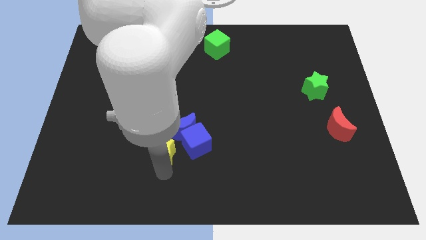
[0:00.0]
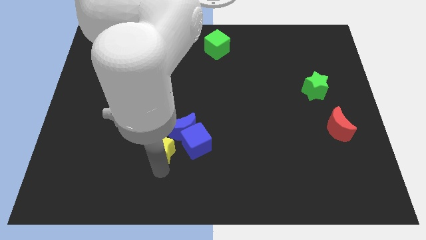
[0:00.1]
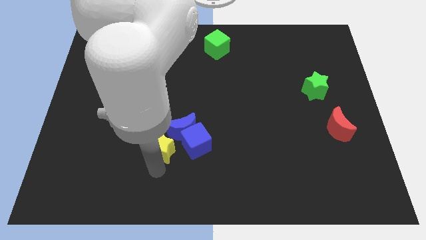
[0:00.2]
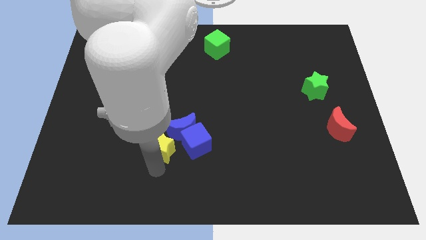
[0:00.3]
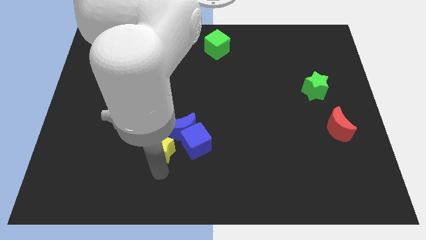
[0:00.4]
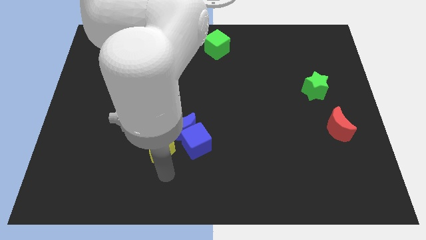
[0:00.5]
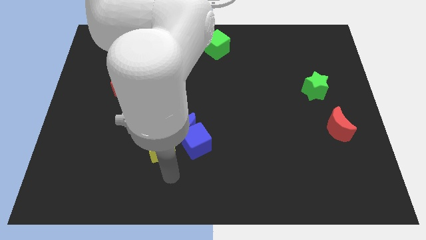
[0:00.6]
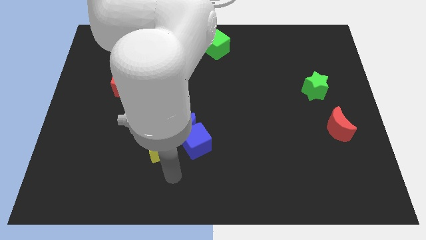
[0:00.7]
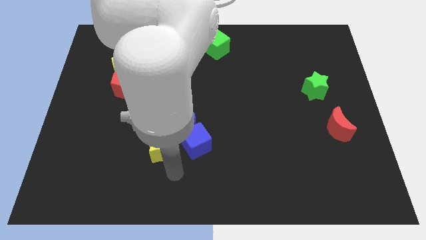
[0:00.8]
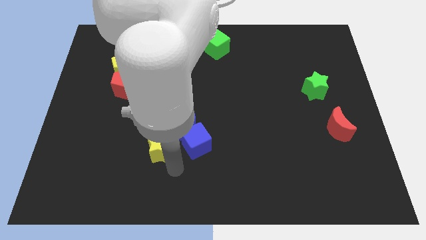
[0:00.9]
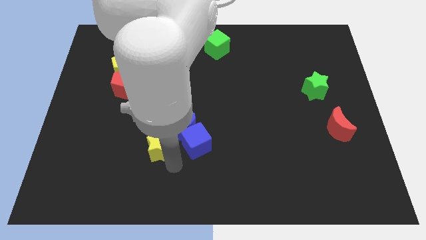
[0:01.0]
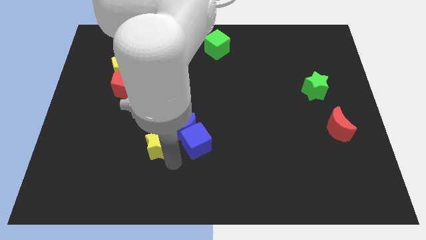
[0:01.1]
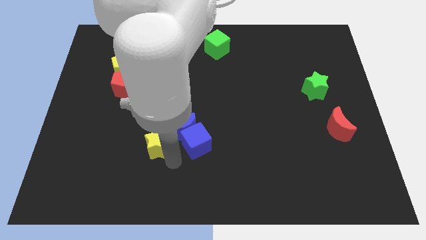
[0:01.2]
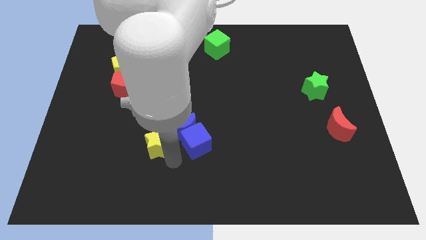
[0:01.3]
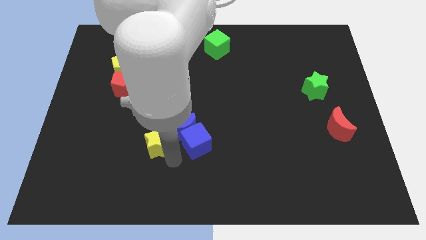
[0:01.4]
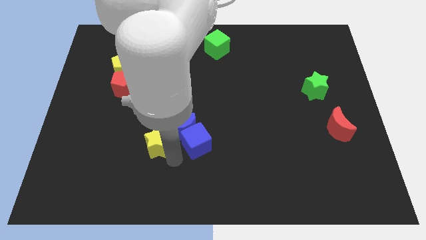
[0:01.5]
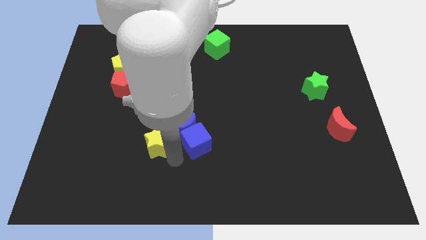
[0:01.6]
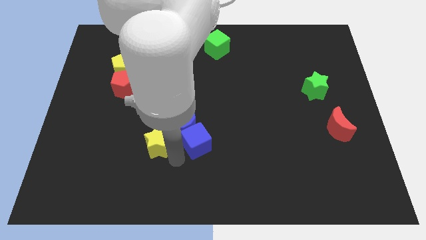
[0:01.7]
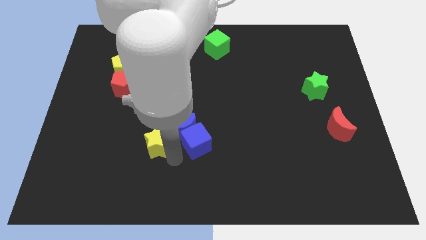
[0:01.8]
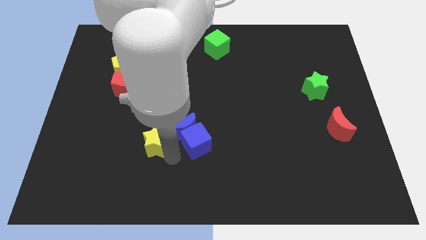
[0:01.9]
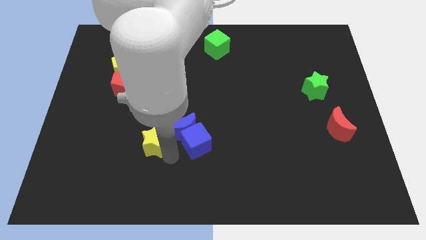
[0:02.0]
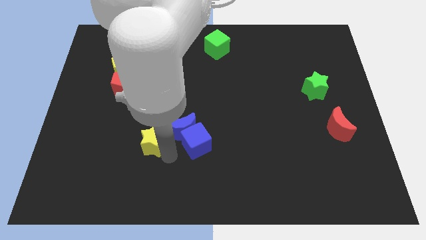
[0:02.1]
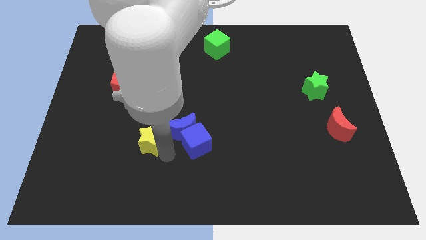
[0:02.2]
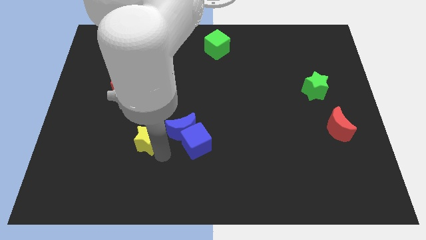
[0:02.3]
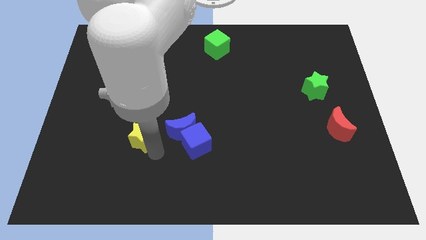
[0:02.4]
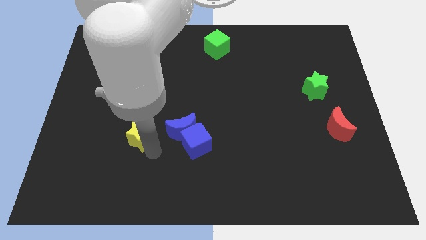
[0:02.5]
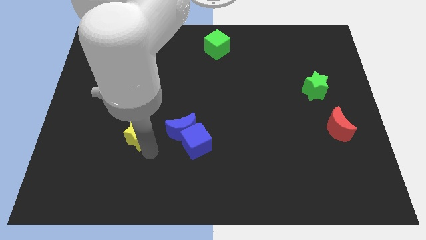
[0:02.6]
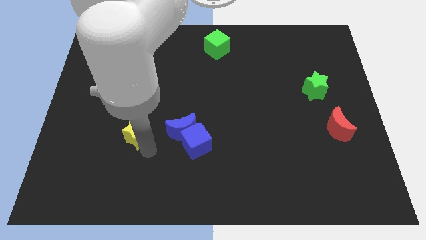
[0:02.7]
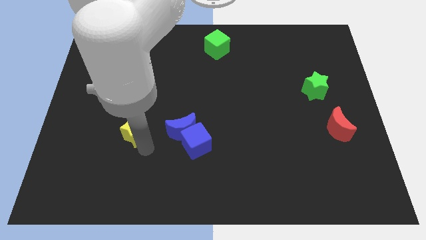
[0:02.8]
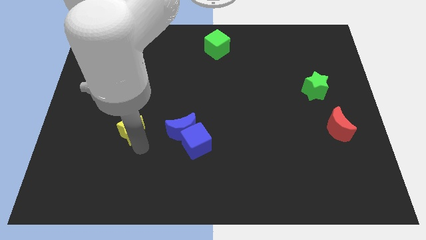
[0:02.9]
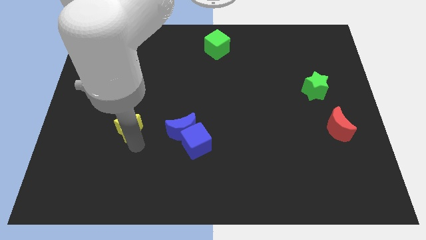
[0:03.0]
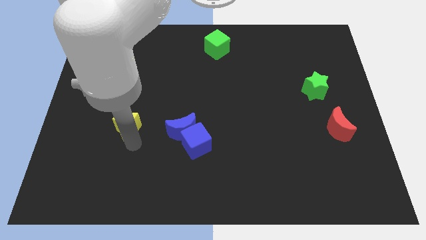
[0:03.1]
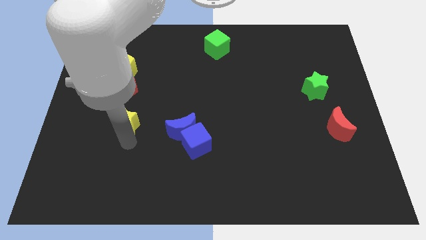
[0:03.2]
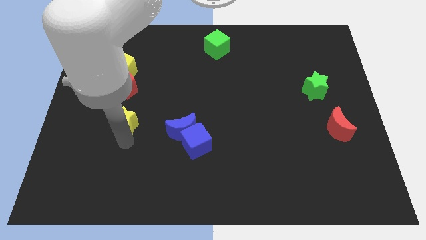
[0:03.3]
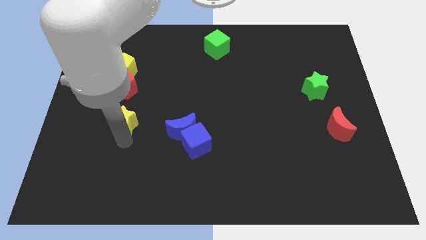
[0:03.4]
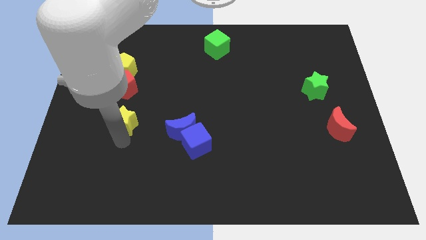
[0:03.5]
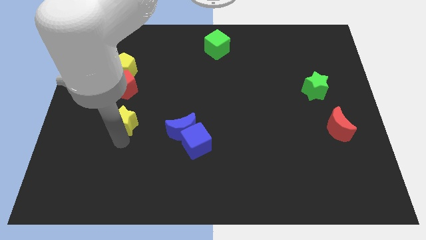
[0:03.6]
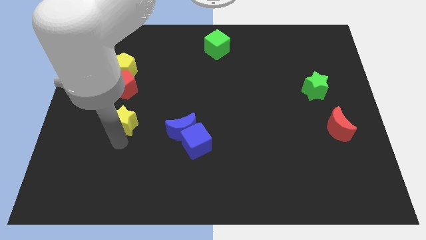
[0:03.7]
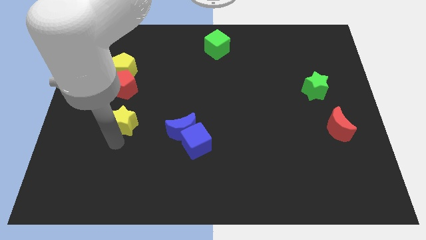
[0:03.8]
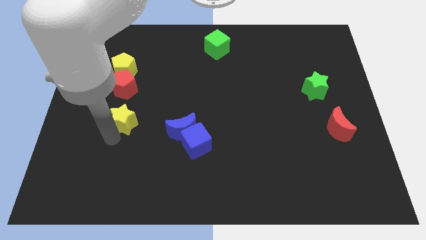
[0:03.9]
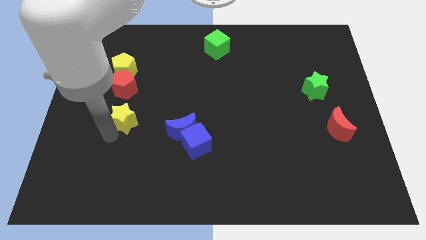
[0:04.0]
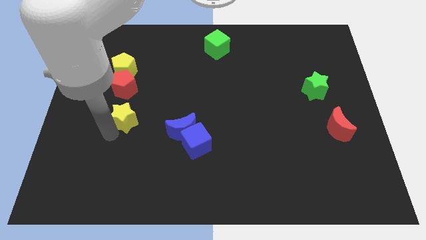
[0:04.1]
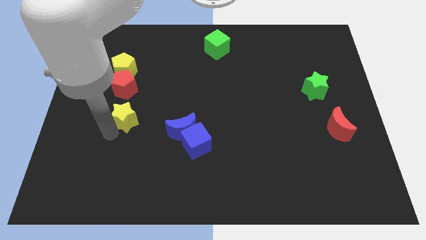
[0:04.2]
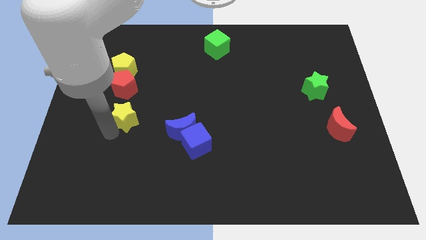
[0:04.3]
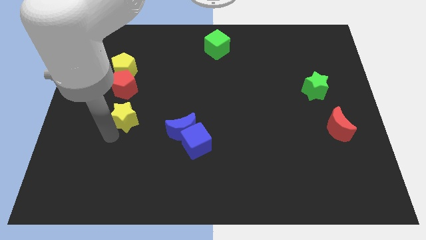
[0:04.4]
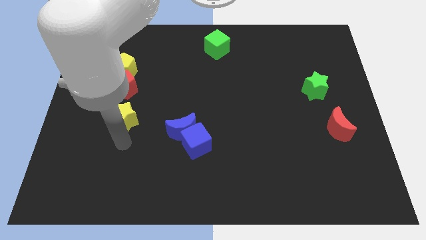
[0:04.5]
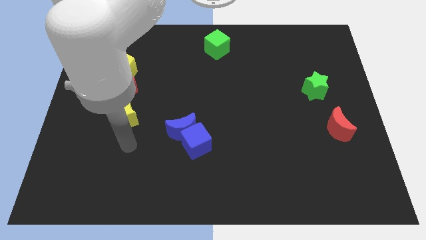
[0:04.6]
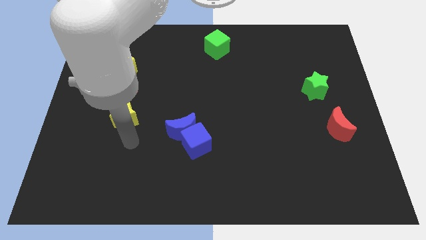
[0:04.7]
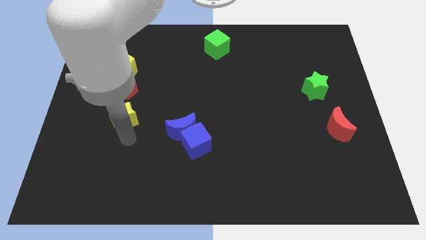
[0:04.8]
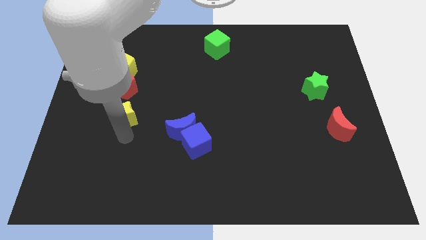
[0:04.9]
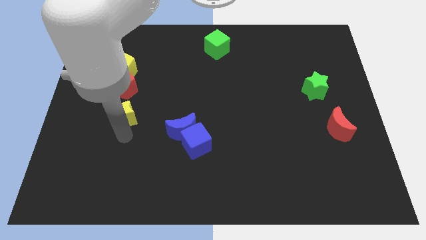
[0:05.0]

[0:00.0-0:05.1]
move yellow star towards red pentagon

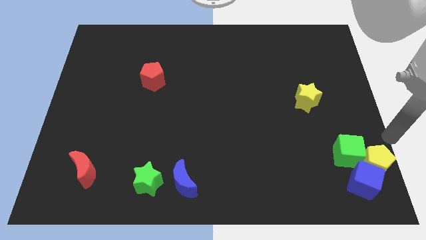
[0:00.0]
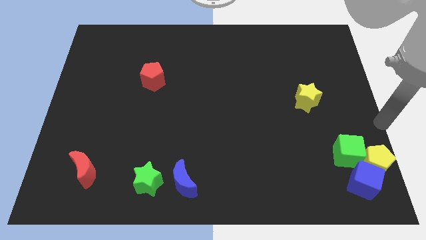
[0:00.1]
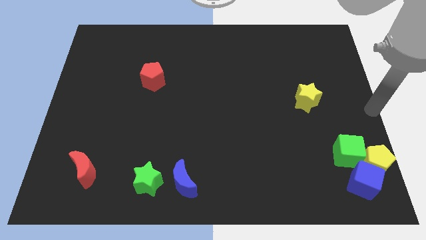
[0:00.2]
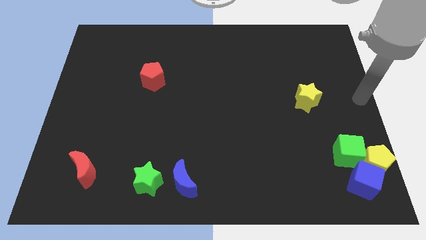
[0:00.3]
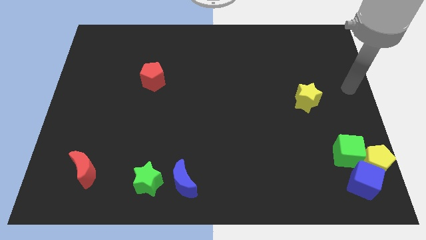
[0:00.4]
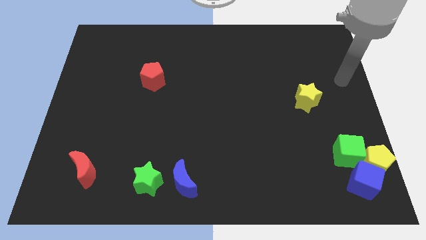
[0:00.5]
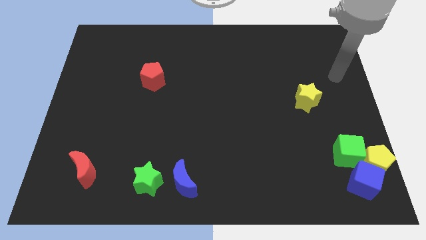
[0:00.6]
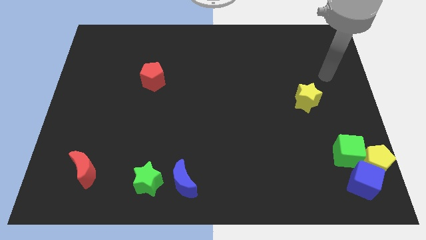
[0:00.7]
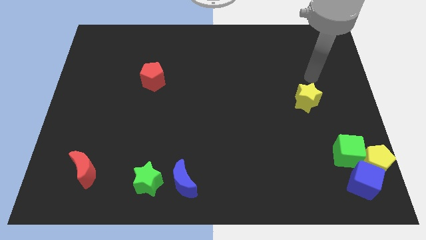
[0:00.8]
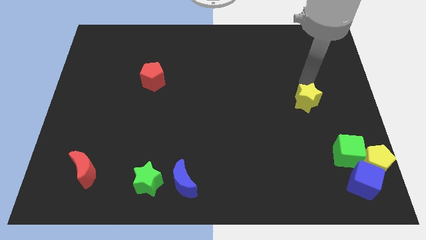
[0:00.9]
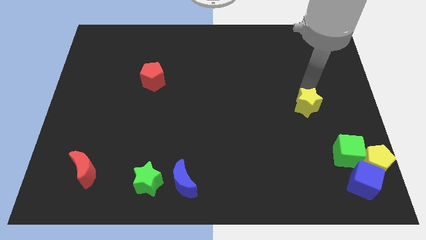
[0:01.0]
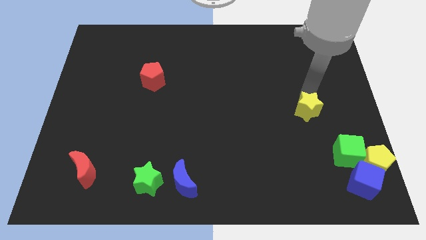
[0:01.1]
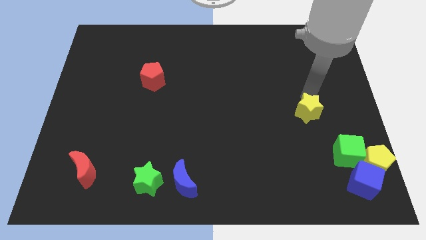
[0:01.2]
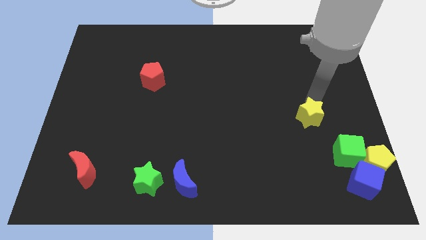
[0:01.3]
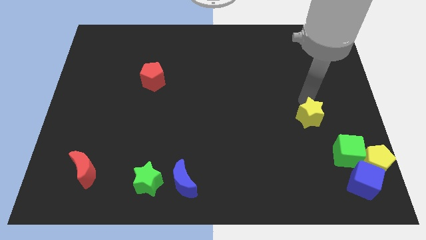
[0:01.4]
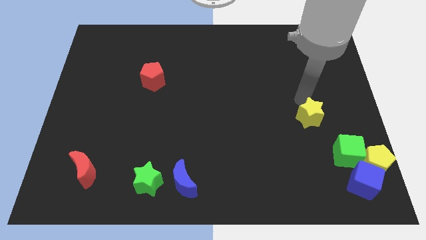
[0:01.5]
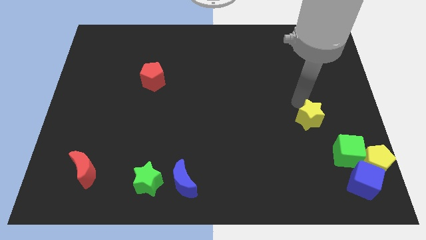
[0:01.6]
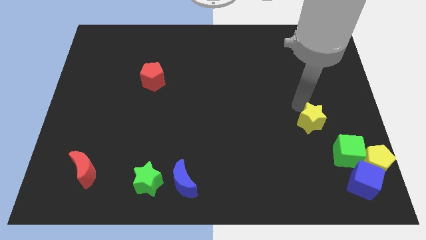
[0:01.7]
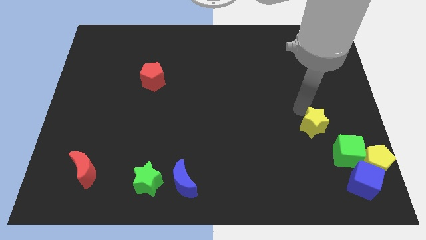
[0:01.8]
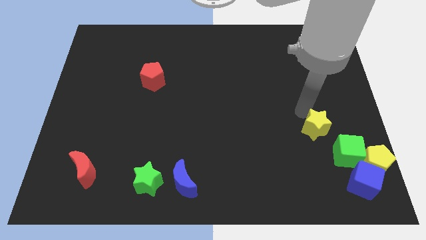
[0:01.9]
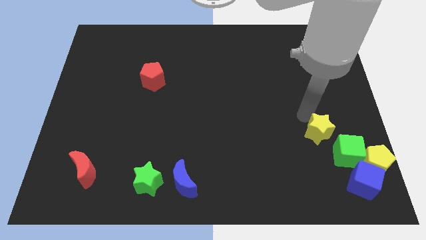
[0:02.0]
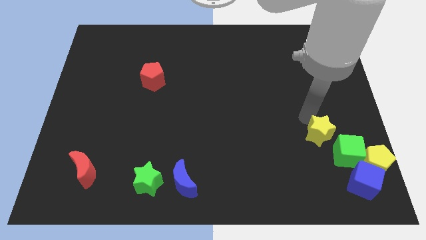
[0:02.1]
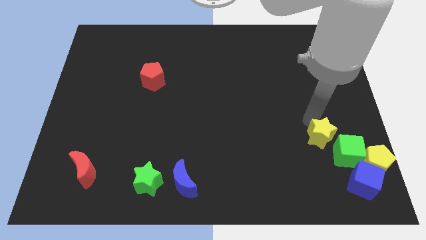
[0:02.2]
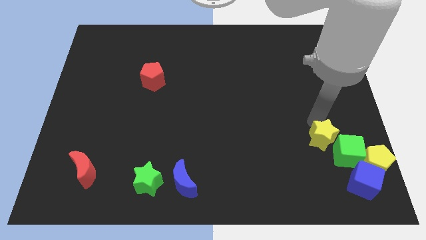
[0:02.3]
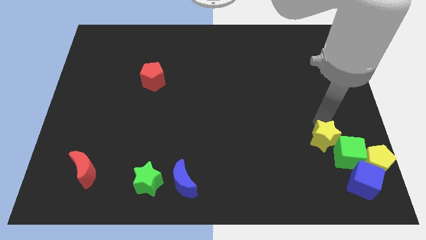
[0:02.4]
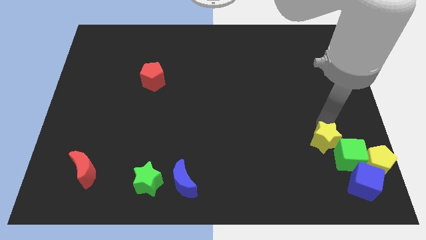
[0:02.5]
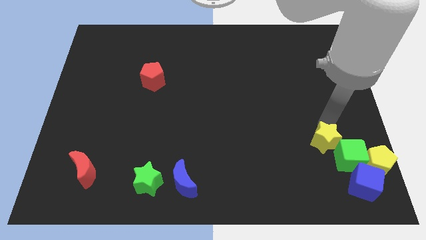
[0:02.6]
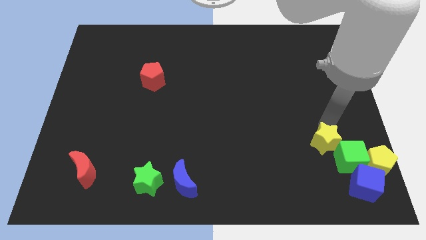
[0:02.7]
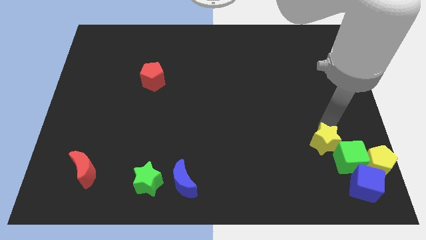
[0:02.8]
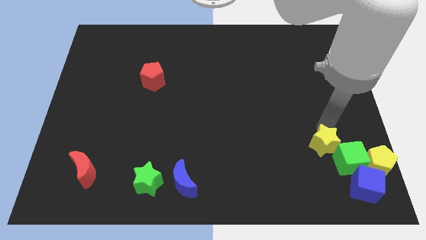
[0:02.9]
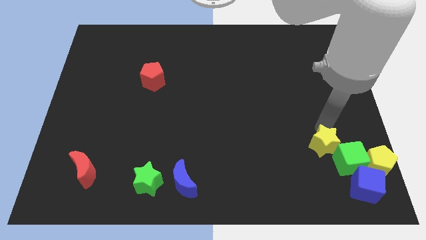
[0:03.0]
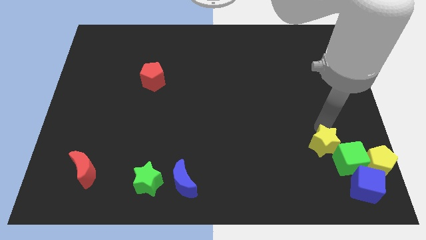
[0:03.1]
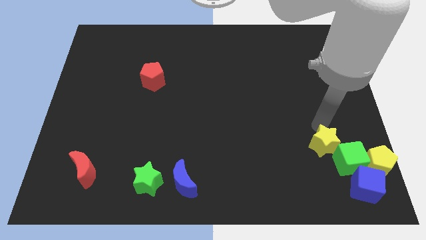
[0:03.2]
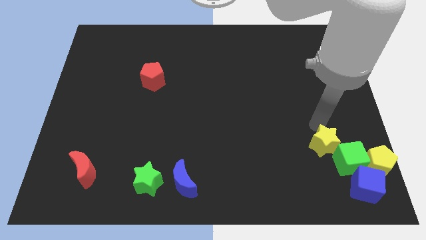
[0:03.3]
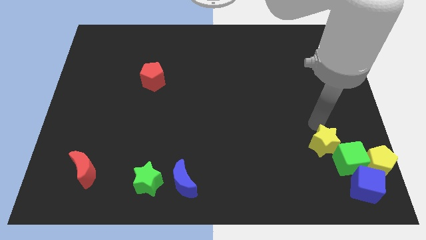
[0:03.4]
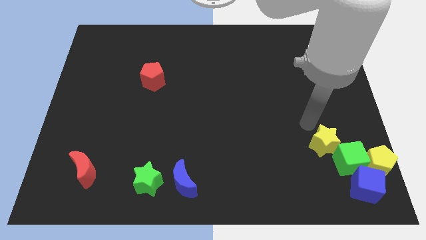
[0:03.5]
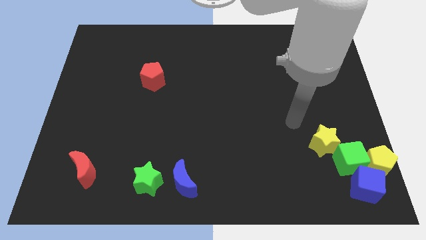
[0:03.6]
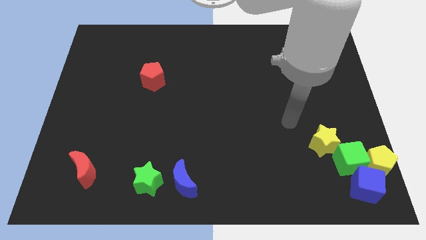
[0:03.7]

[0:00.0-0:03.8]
move the yellow star into the green cube

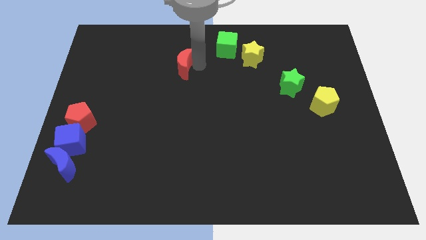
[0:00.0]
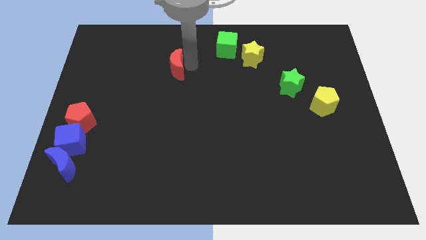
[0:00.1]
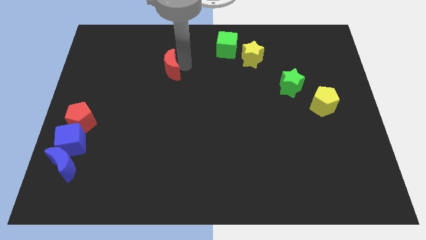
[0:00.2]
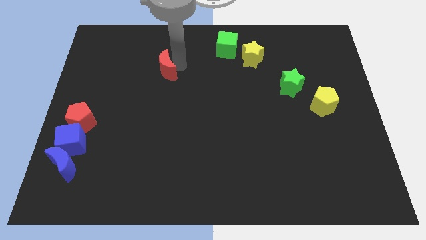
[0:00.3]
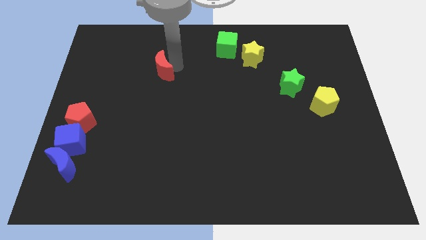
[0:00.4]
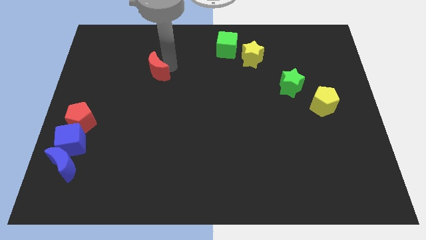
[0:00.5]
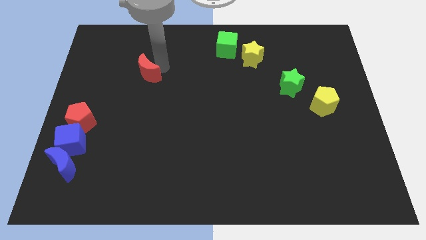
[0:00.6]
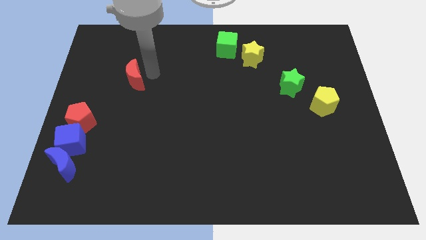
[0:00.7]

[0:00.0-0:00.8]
push the red crescent to the left of the board
